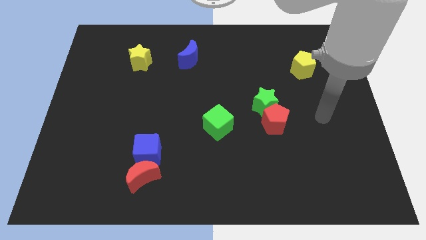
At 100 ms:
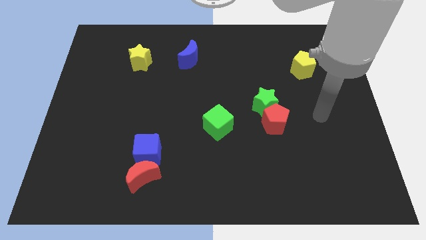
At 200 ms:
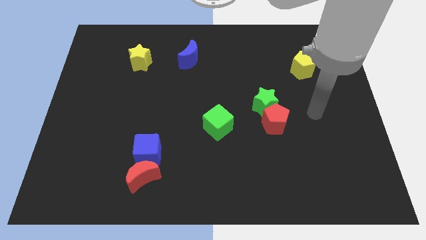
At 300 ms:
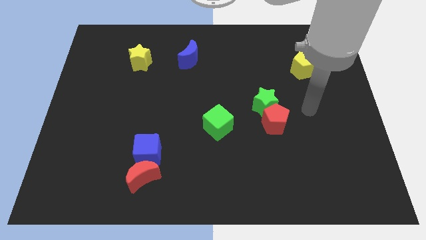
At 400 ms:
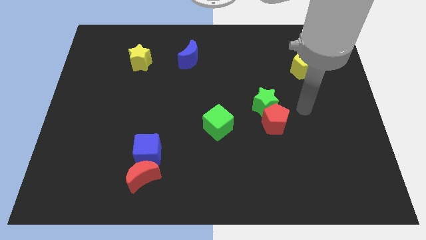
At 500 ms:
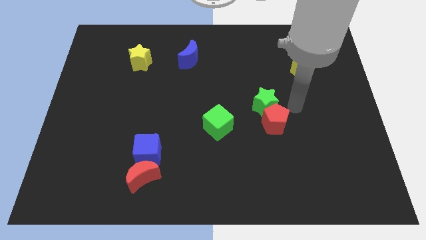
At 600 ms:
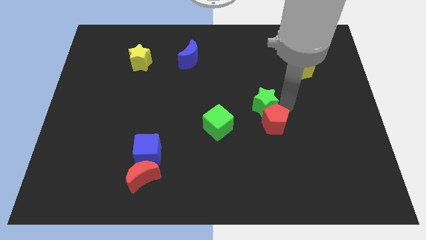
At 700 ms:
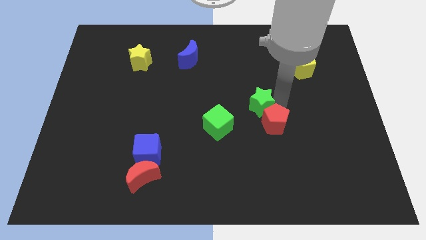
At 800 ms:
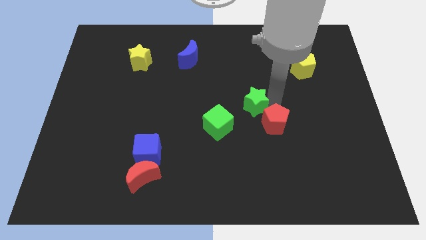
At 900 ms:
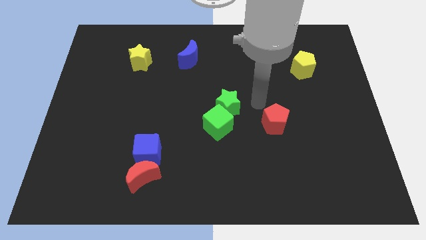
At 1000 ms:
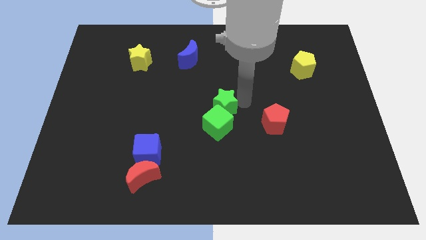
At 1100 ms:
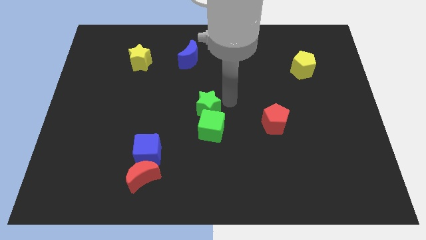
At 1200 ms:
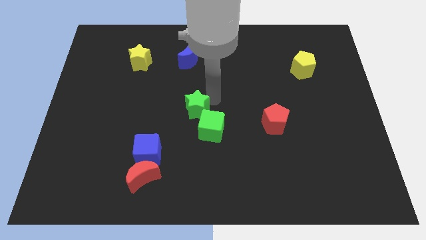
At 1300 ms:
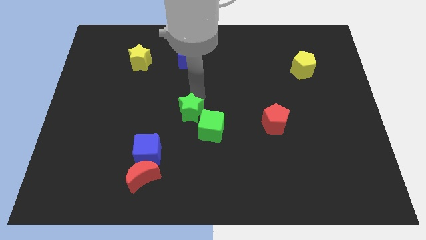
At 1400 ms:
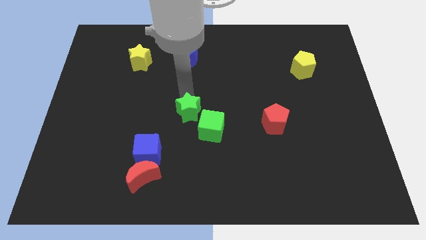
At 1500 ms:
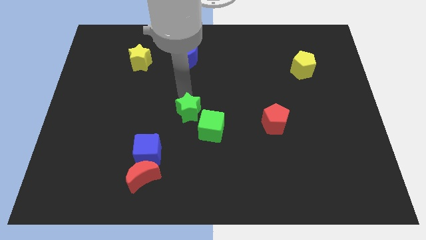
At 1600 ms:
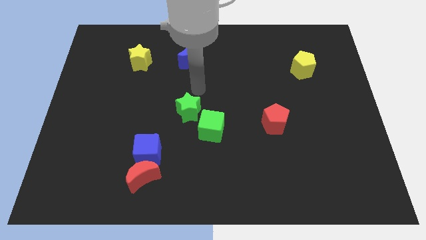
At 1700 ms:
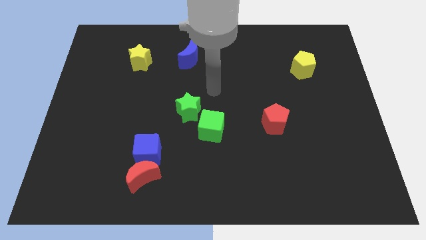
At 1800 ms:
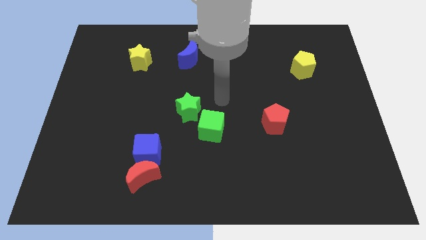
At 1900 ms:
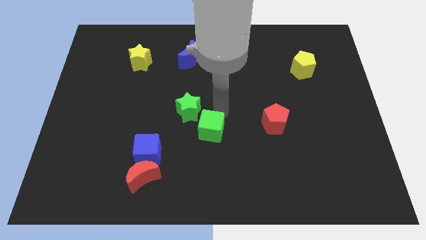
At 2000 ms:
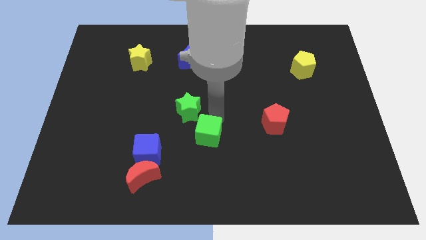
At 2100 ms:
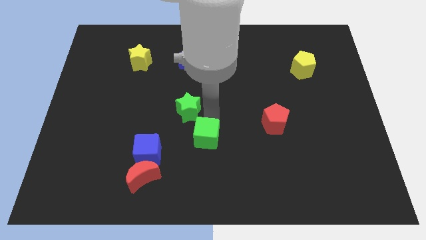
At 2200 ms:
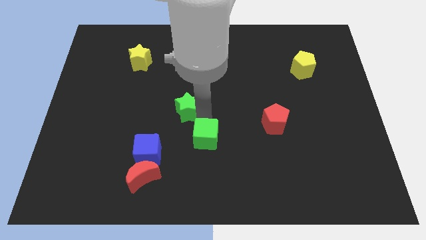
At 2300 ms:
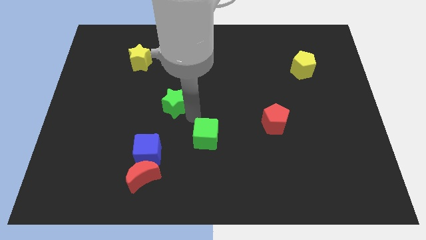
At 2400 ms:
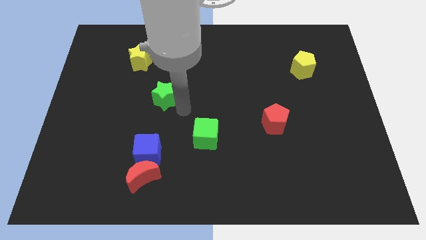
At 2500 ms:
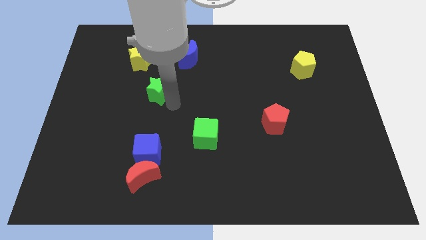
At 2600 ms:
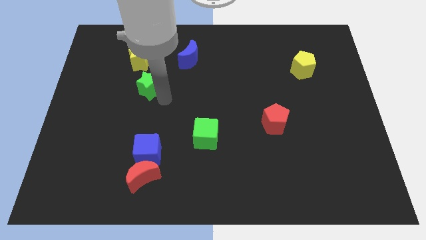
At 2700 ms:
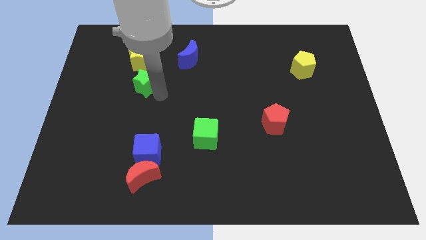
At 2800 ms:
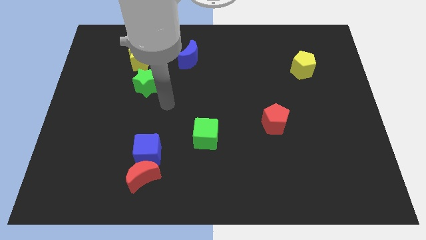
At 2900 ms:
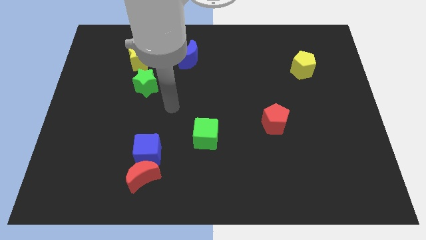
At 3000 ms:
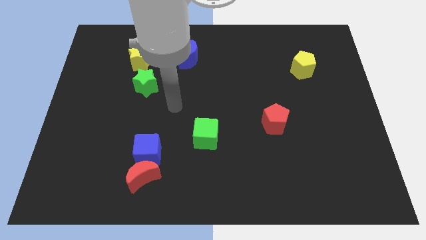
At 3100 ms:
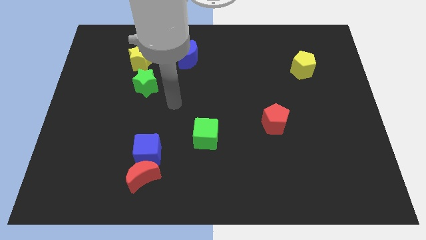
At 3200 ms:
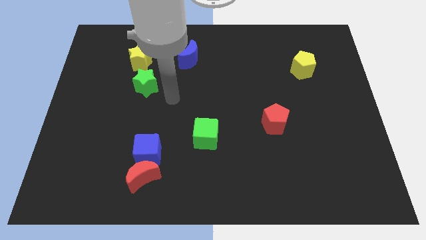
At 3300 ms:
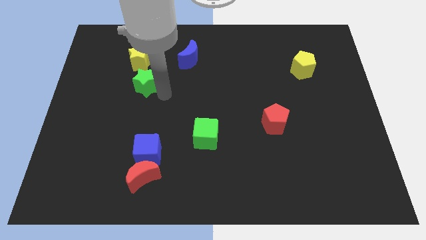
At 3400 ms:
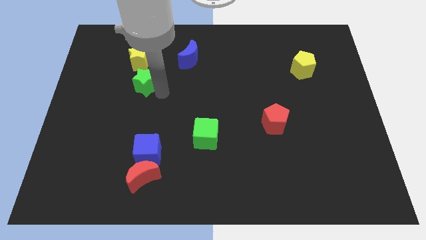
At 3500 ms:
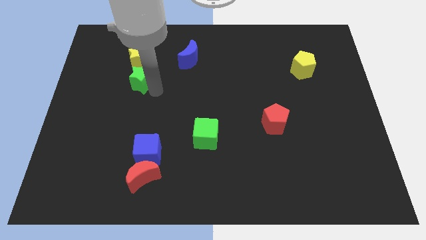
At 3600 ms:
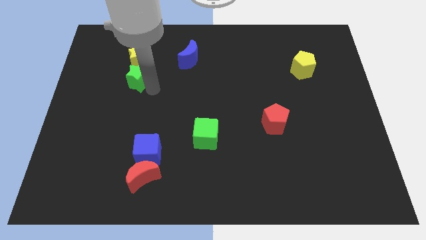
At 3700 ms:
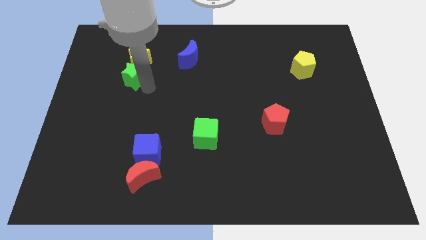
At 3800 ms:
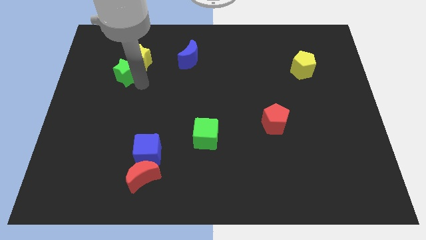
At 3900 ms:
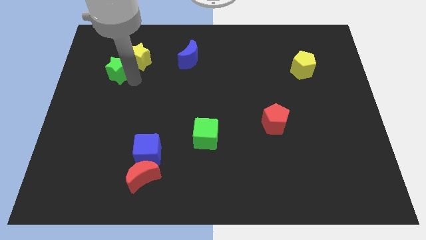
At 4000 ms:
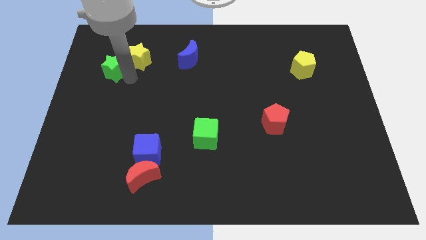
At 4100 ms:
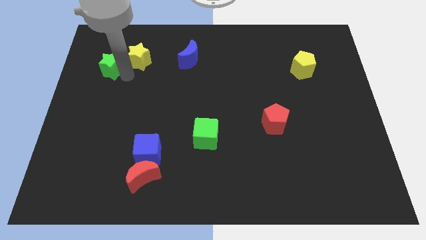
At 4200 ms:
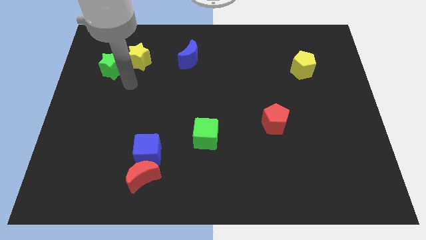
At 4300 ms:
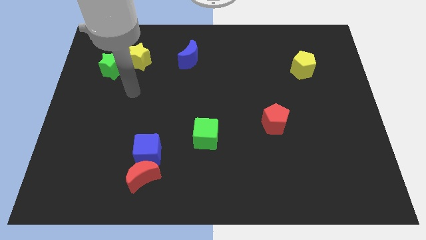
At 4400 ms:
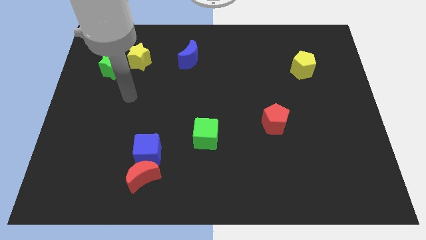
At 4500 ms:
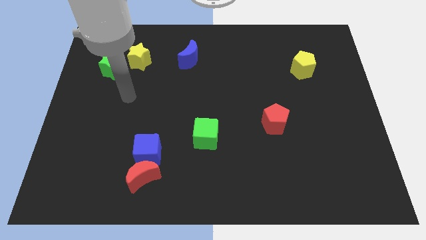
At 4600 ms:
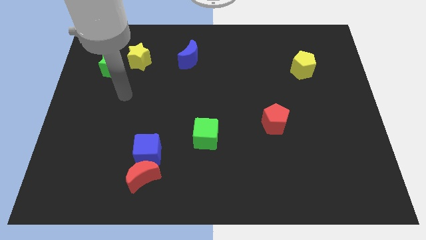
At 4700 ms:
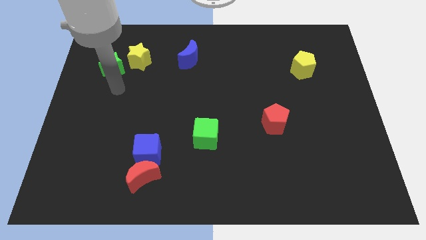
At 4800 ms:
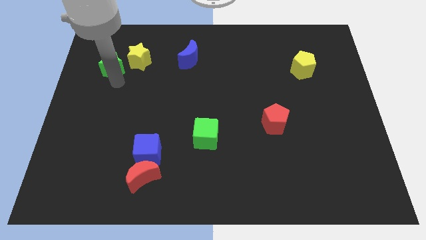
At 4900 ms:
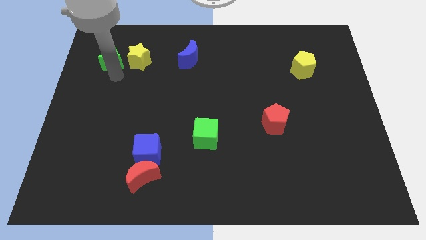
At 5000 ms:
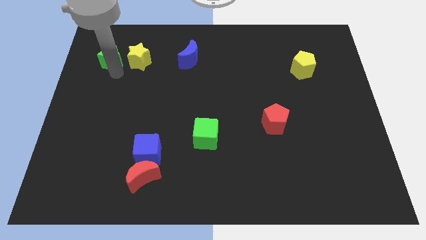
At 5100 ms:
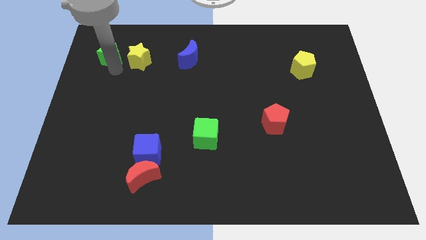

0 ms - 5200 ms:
place green star to the left side of the yellow star

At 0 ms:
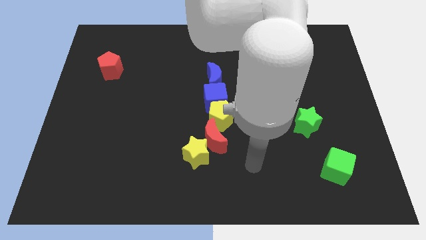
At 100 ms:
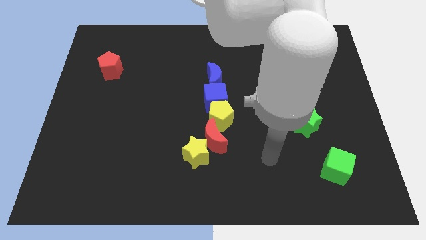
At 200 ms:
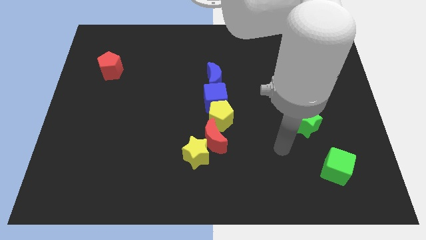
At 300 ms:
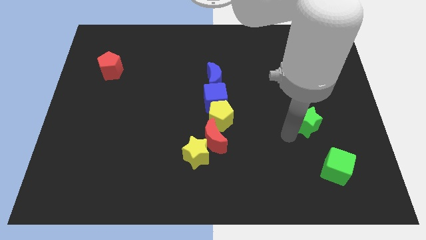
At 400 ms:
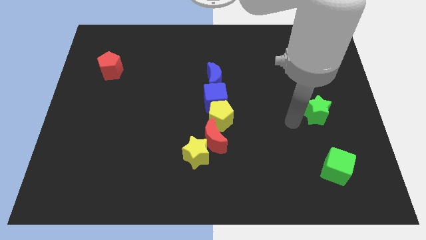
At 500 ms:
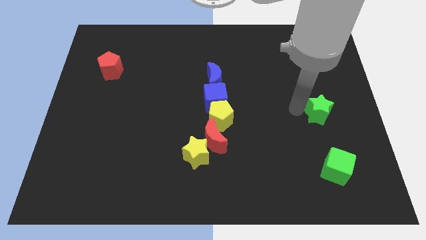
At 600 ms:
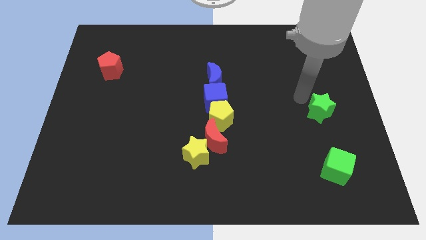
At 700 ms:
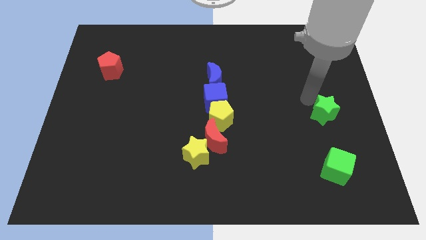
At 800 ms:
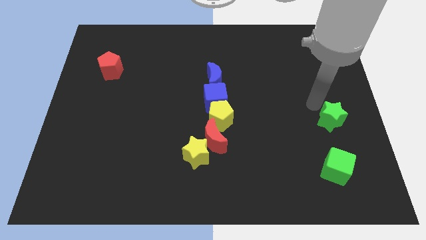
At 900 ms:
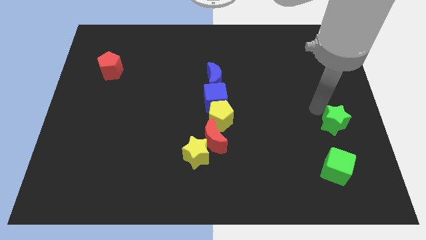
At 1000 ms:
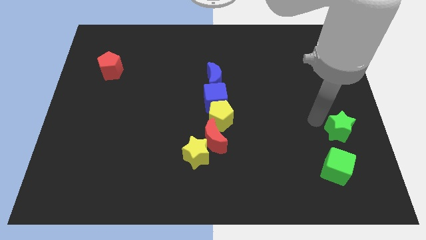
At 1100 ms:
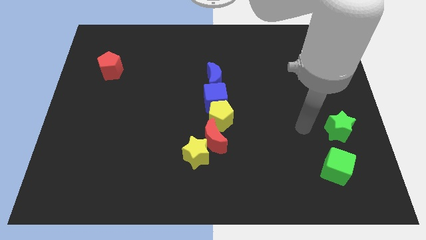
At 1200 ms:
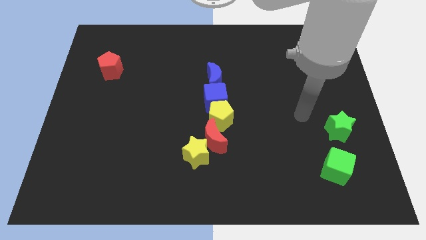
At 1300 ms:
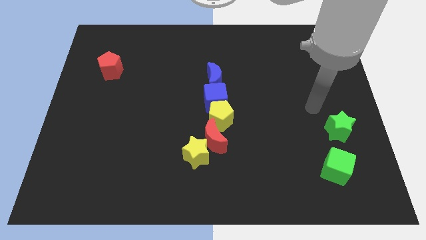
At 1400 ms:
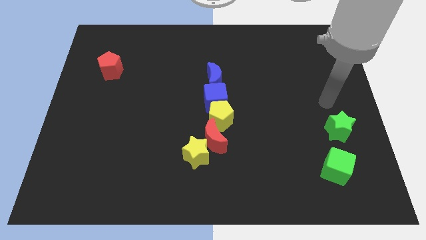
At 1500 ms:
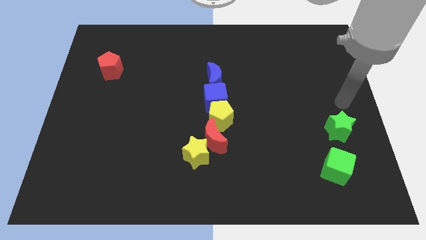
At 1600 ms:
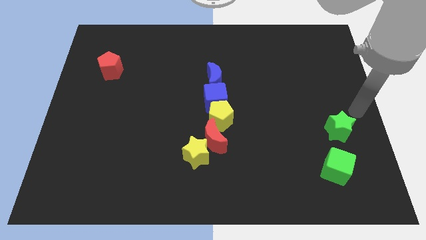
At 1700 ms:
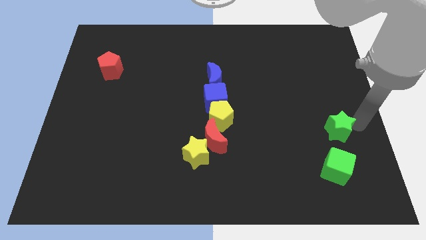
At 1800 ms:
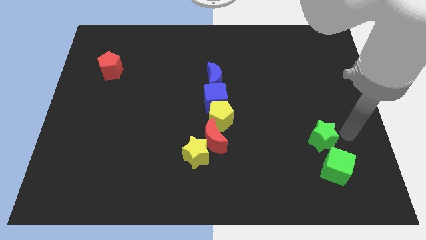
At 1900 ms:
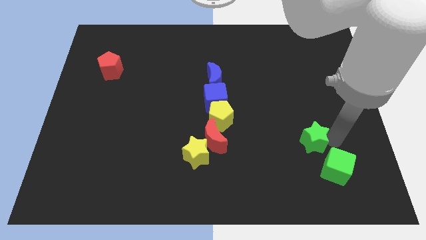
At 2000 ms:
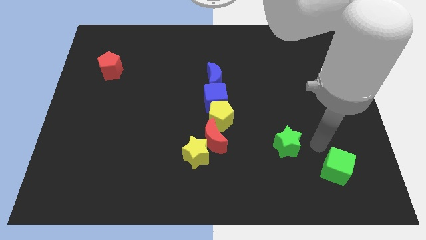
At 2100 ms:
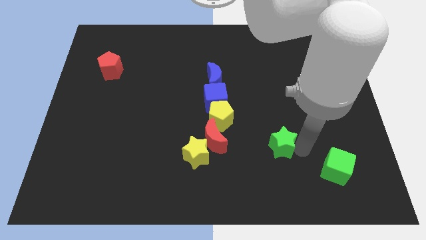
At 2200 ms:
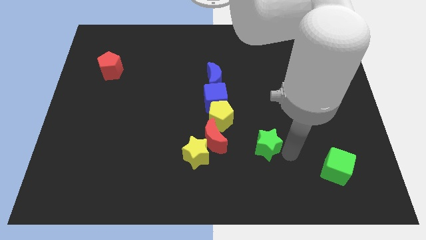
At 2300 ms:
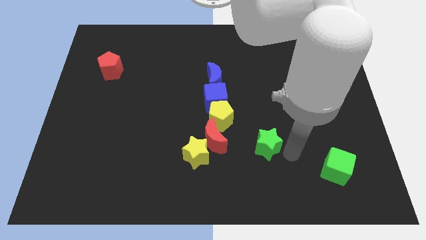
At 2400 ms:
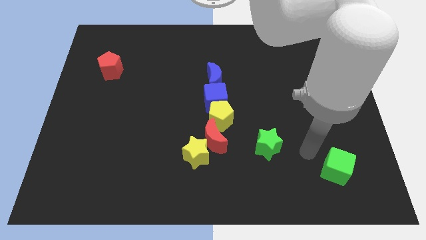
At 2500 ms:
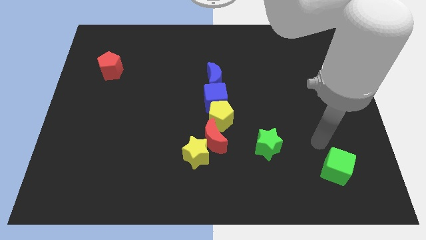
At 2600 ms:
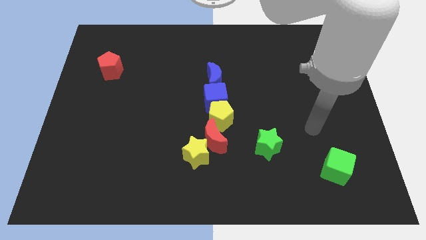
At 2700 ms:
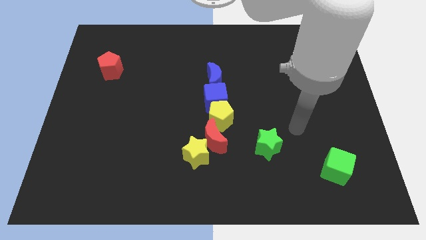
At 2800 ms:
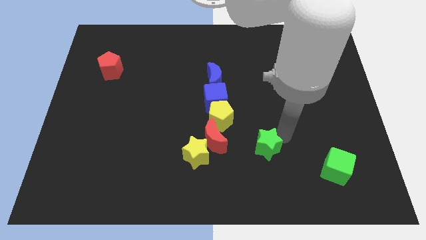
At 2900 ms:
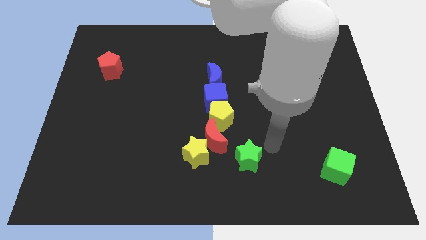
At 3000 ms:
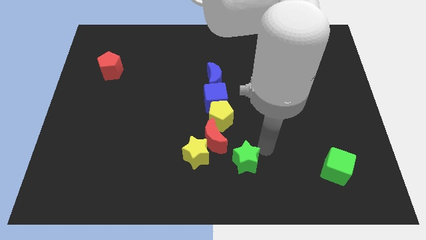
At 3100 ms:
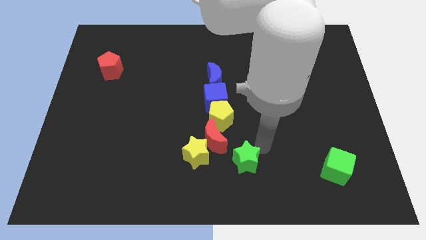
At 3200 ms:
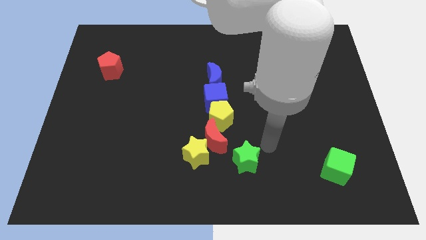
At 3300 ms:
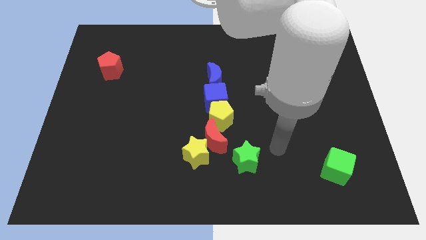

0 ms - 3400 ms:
drag the green star diagonally bottom right to the red moon

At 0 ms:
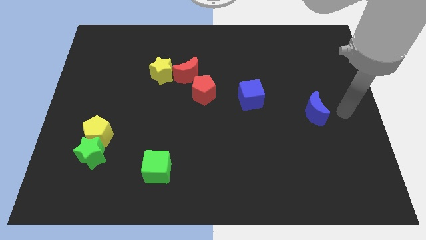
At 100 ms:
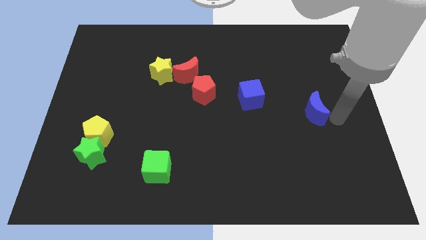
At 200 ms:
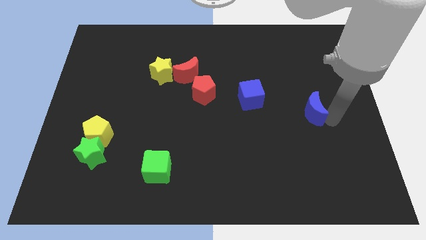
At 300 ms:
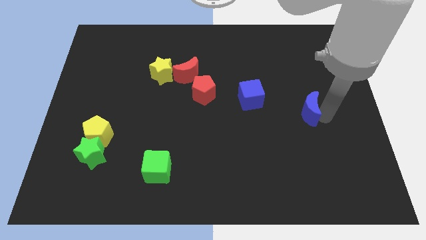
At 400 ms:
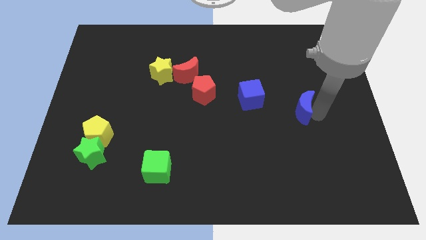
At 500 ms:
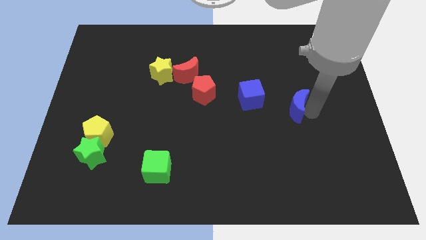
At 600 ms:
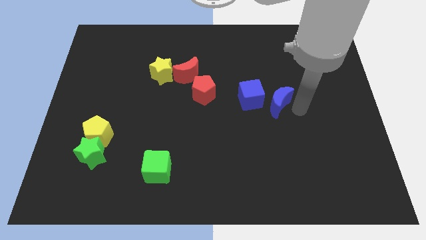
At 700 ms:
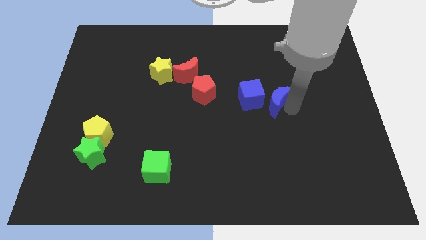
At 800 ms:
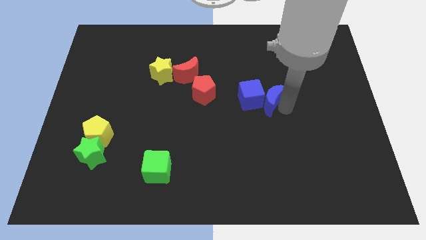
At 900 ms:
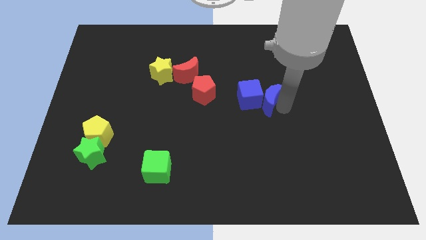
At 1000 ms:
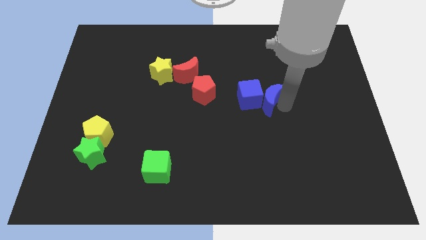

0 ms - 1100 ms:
slide the blue moon into the blue cube
